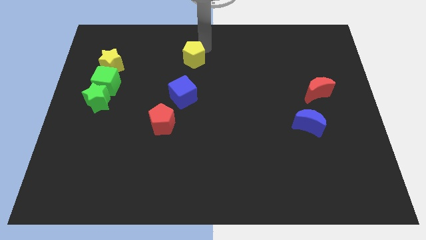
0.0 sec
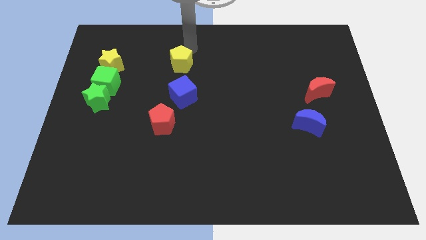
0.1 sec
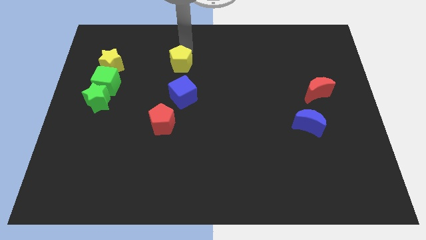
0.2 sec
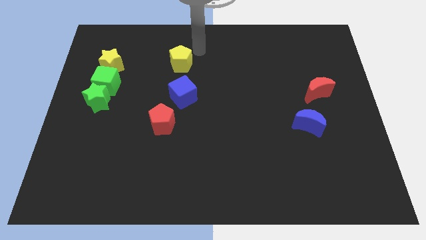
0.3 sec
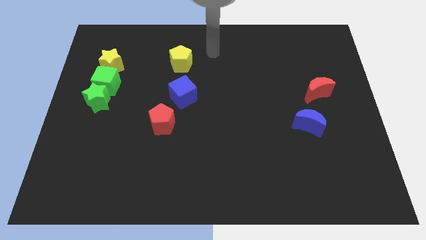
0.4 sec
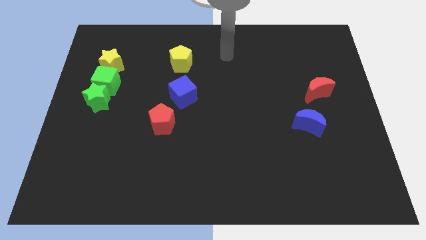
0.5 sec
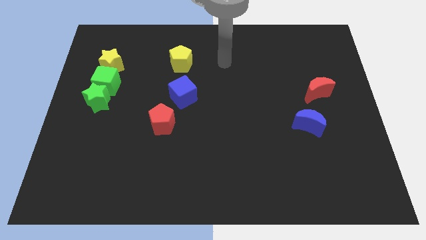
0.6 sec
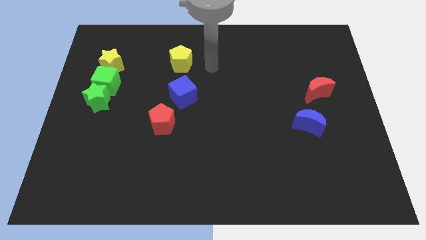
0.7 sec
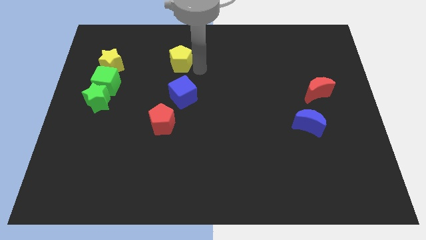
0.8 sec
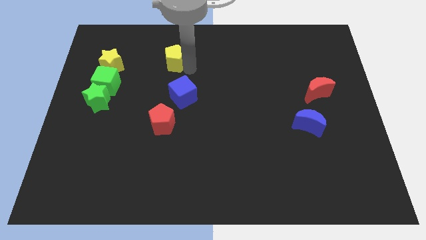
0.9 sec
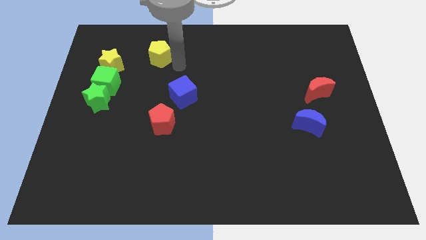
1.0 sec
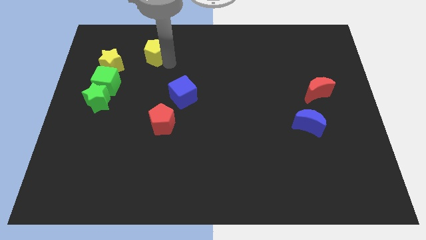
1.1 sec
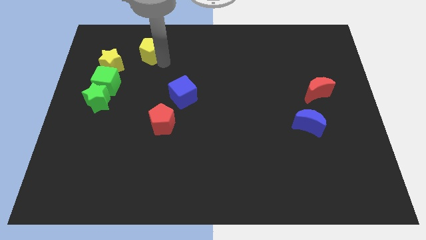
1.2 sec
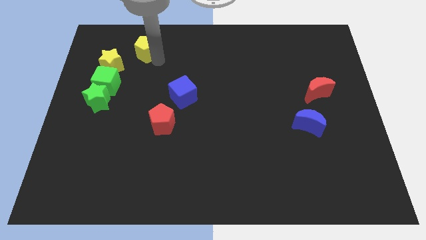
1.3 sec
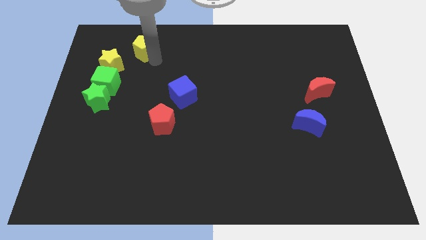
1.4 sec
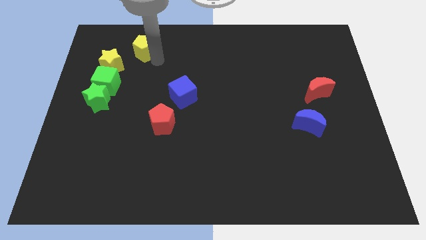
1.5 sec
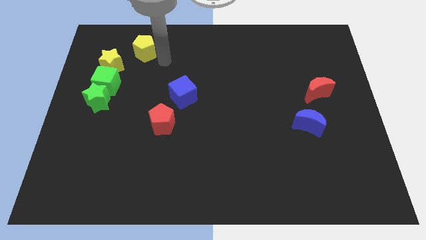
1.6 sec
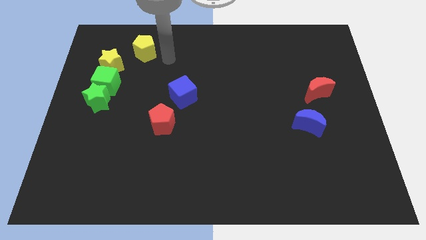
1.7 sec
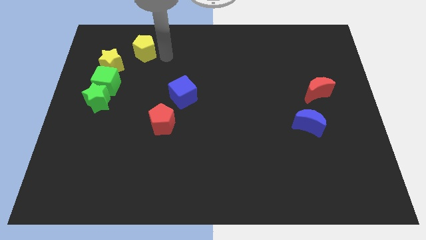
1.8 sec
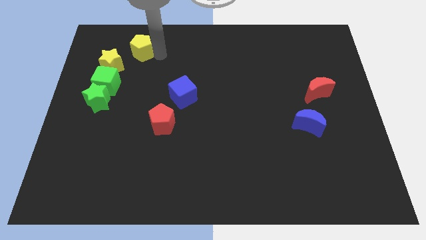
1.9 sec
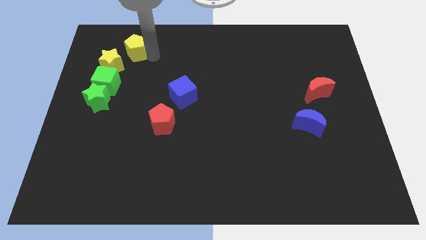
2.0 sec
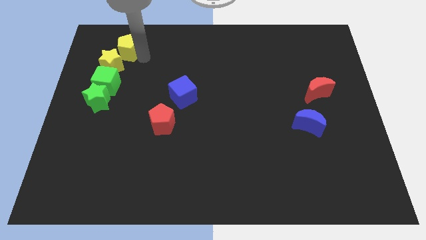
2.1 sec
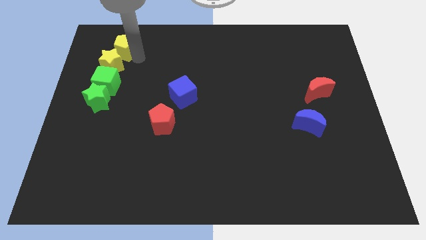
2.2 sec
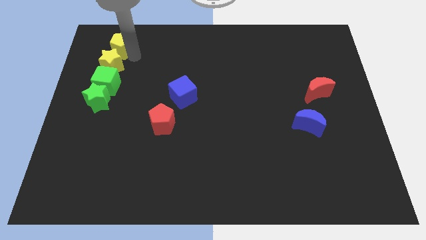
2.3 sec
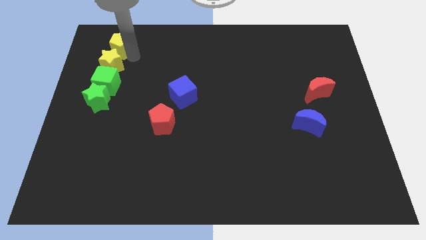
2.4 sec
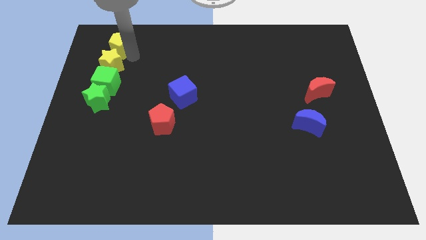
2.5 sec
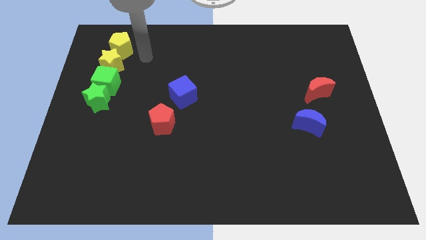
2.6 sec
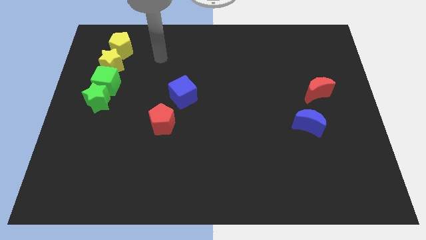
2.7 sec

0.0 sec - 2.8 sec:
push the yellow pentagon to the top of the yellow star

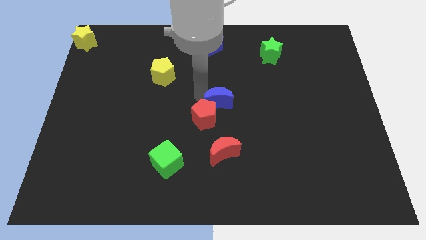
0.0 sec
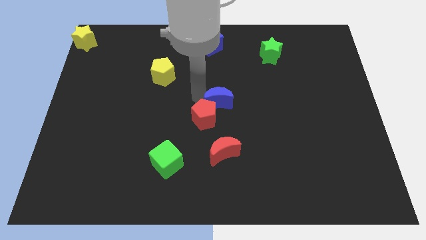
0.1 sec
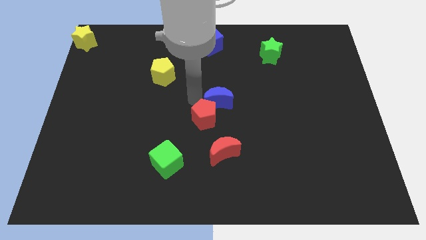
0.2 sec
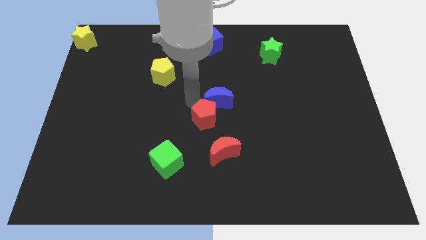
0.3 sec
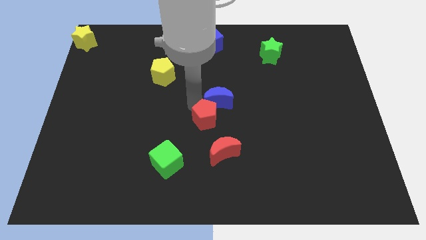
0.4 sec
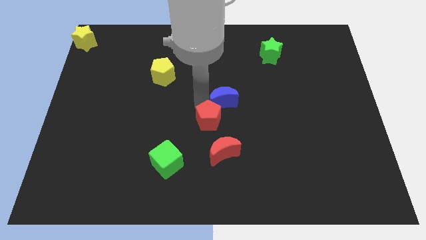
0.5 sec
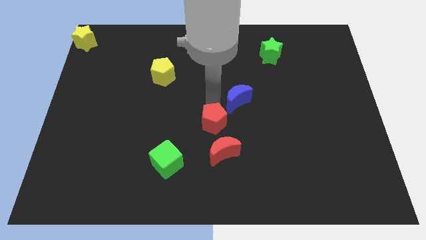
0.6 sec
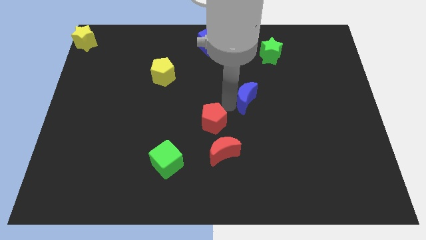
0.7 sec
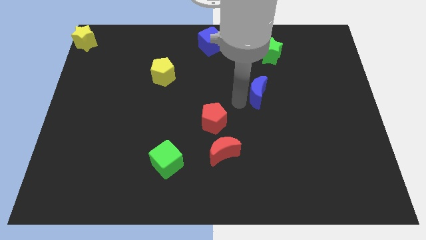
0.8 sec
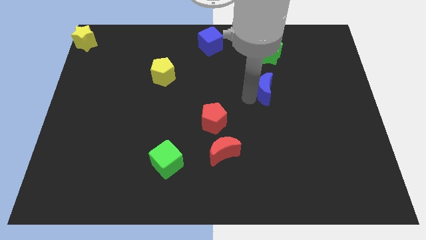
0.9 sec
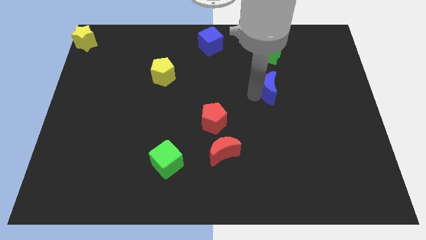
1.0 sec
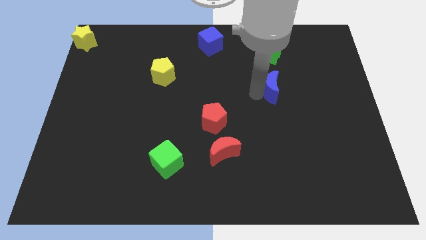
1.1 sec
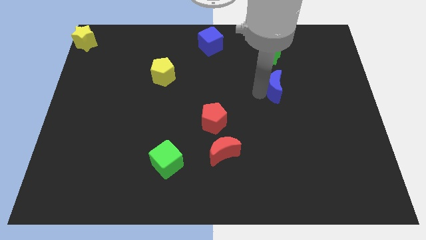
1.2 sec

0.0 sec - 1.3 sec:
move the blue crescent away from the red pentagon

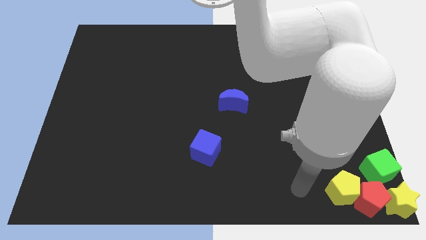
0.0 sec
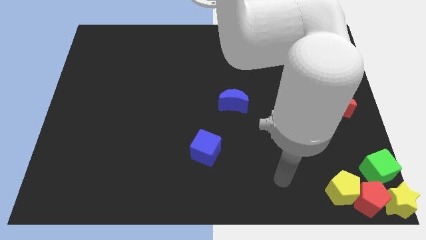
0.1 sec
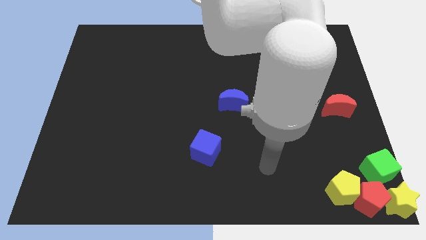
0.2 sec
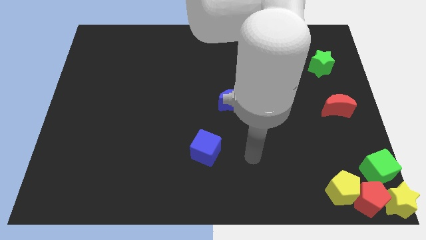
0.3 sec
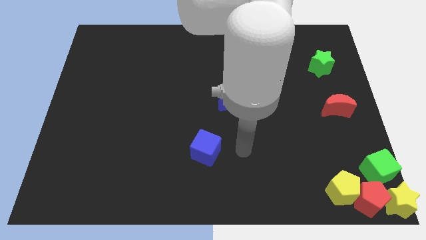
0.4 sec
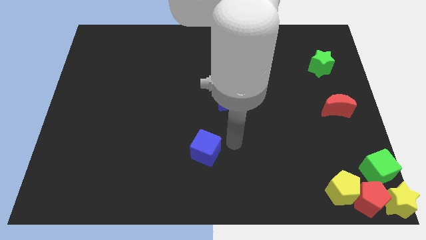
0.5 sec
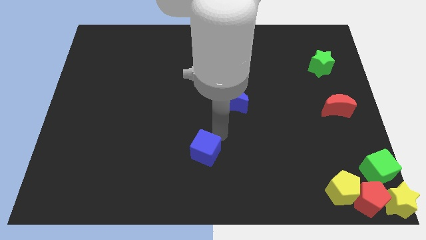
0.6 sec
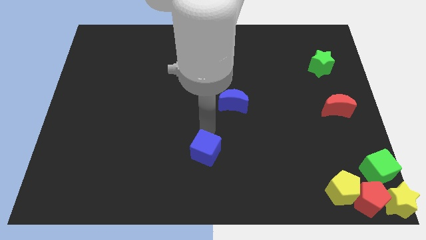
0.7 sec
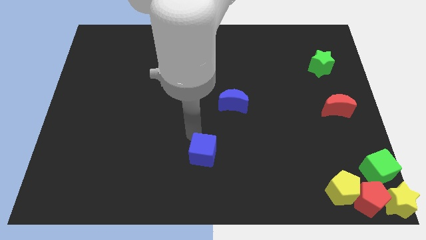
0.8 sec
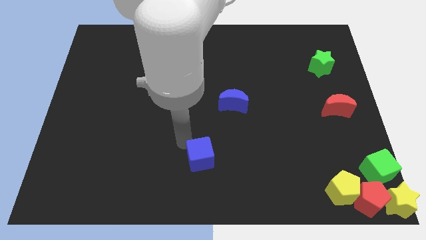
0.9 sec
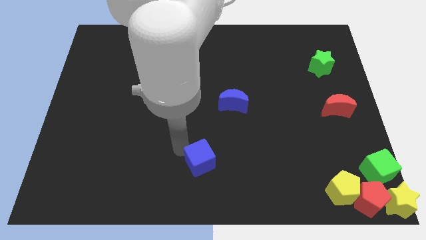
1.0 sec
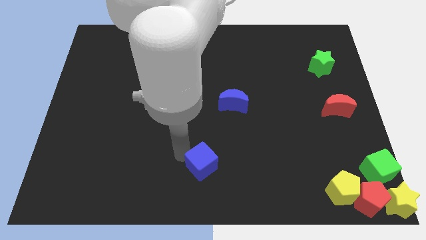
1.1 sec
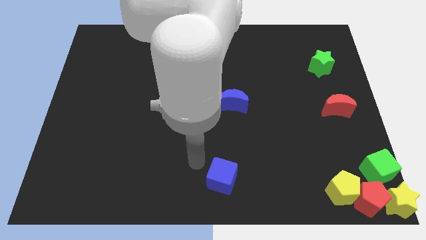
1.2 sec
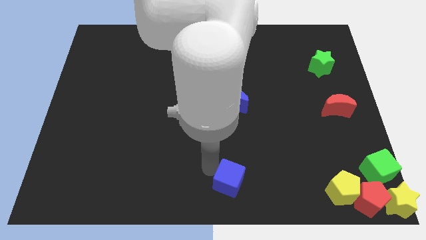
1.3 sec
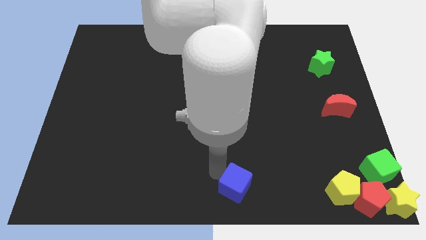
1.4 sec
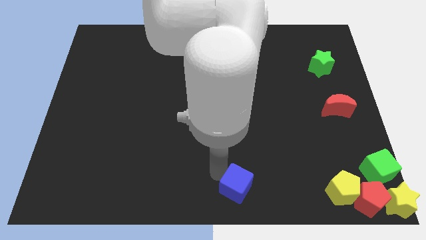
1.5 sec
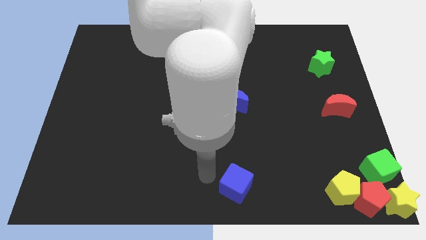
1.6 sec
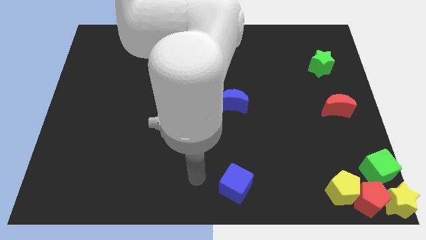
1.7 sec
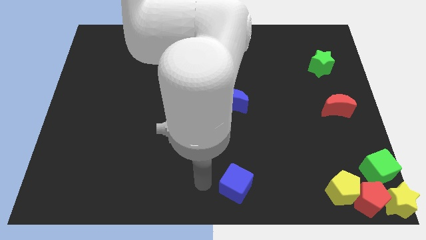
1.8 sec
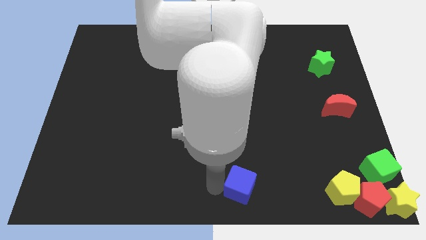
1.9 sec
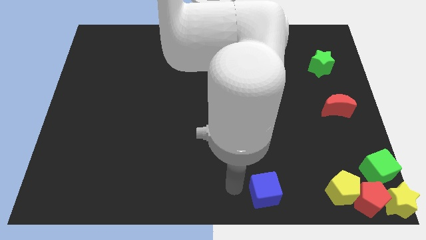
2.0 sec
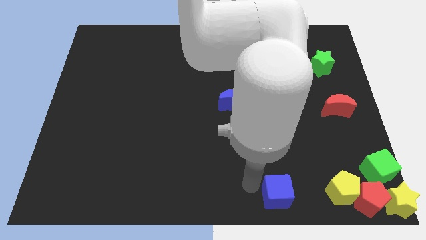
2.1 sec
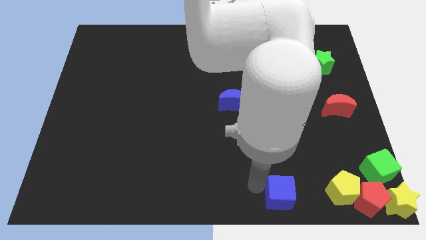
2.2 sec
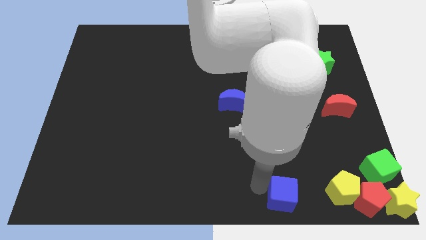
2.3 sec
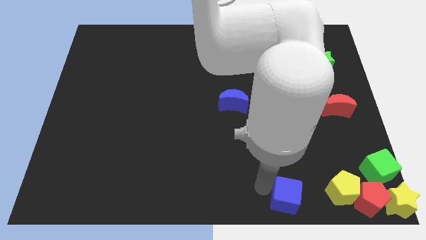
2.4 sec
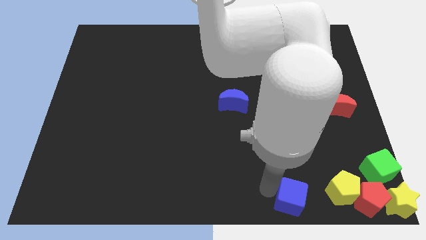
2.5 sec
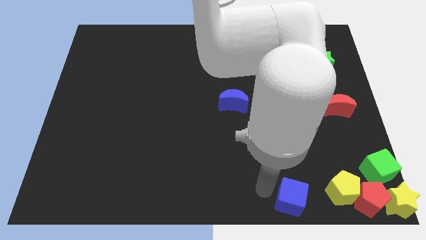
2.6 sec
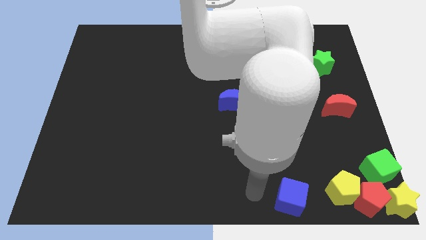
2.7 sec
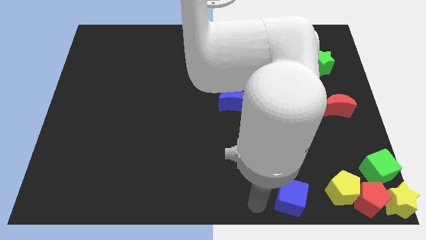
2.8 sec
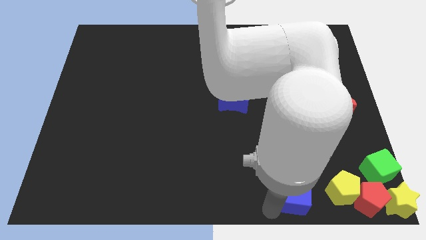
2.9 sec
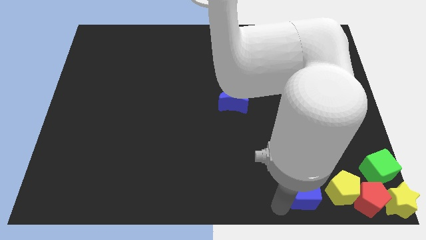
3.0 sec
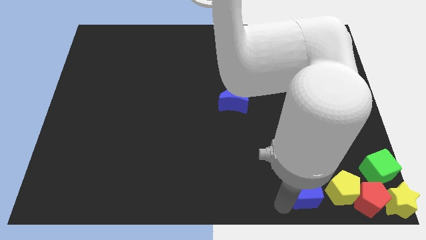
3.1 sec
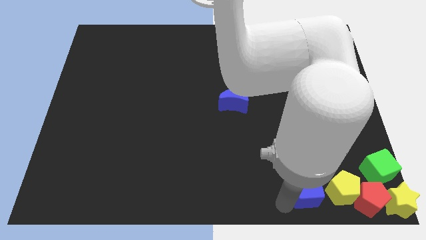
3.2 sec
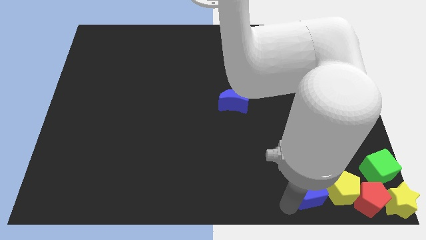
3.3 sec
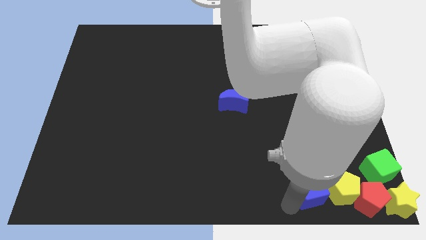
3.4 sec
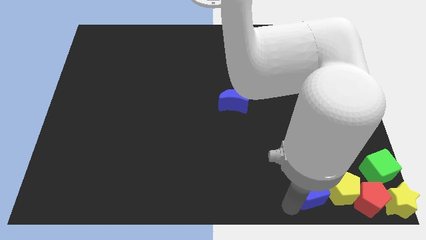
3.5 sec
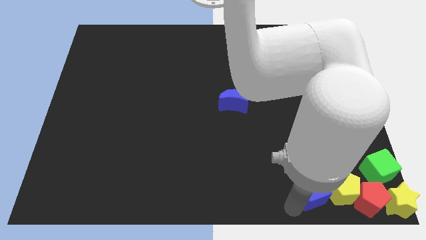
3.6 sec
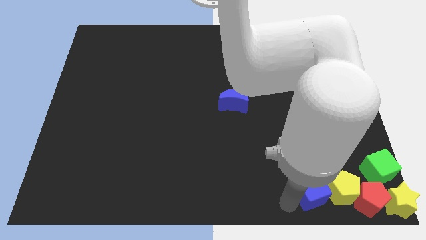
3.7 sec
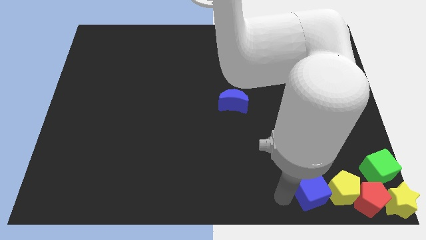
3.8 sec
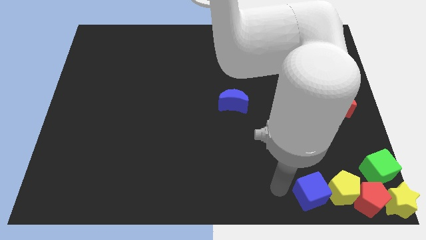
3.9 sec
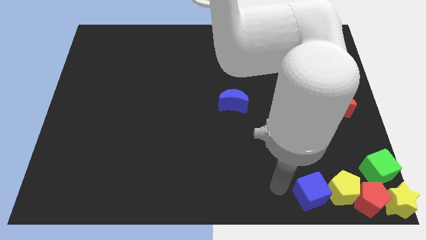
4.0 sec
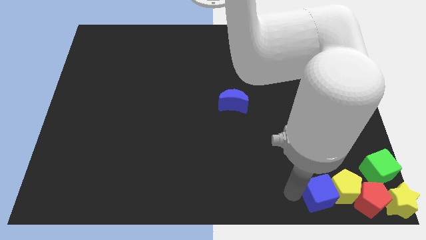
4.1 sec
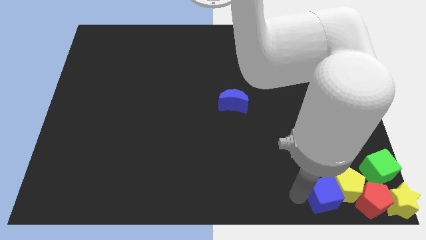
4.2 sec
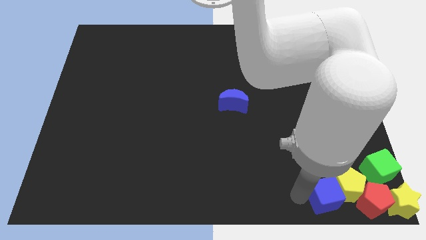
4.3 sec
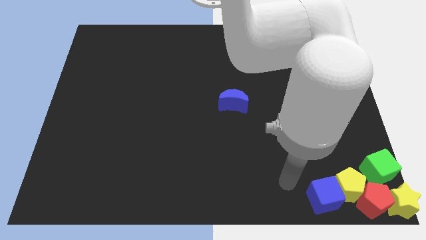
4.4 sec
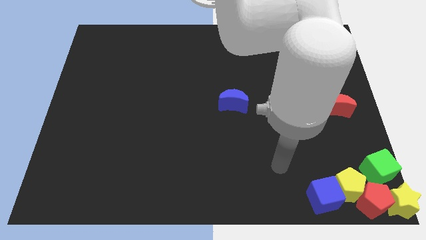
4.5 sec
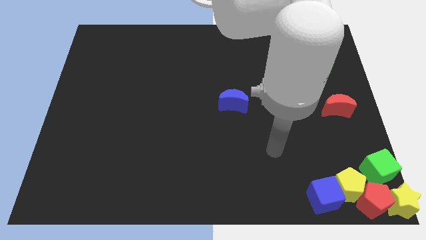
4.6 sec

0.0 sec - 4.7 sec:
slide the blue cube into the yellow pentagon
